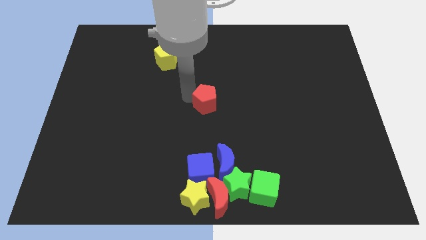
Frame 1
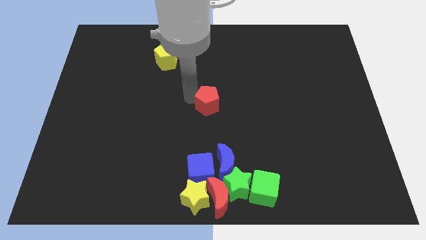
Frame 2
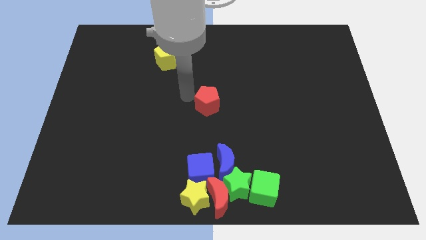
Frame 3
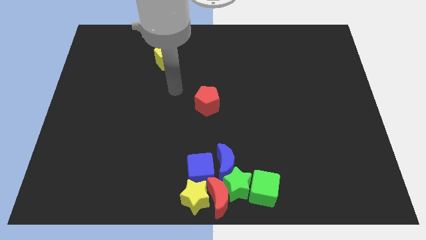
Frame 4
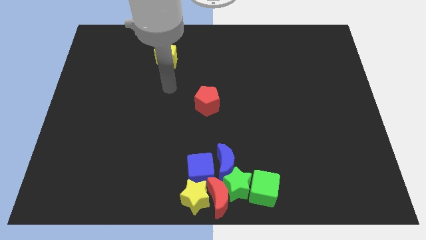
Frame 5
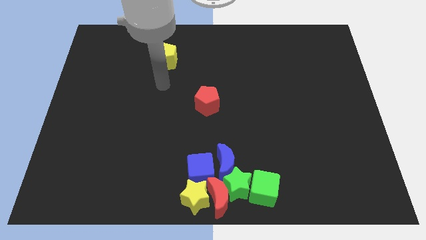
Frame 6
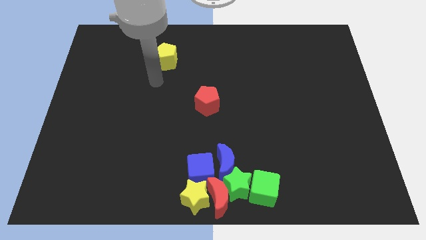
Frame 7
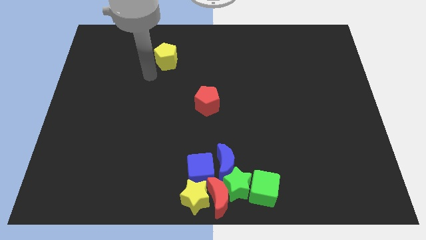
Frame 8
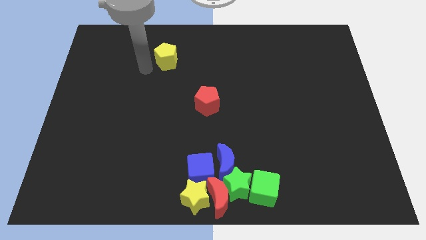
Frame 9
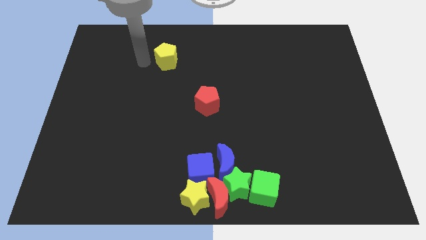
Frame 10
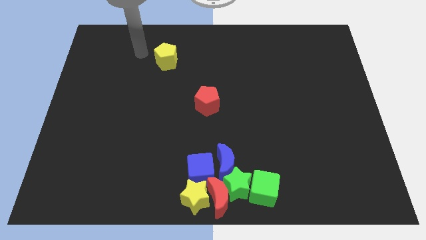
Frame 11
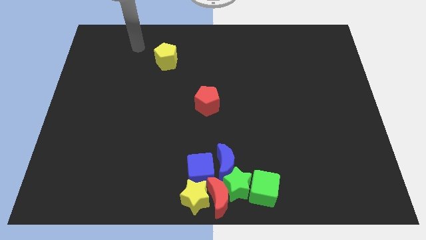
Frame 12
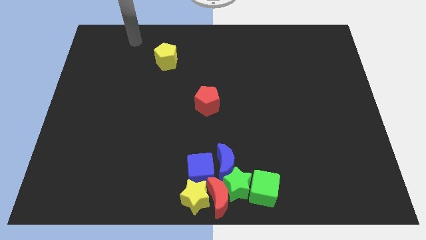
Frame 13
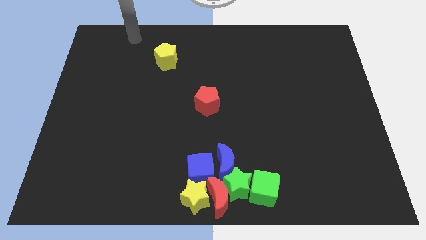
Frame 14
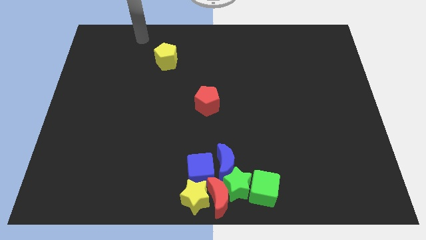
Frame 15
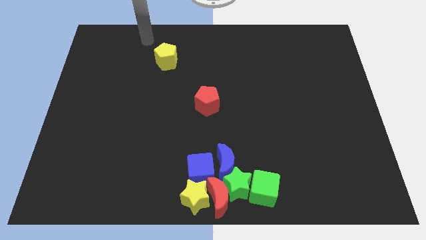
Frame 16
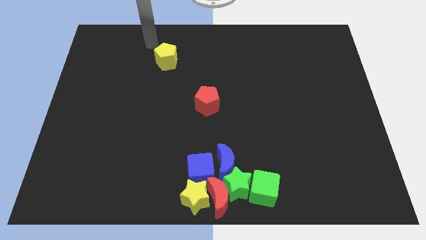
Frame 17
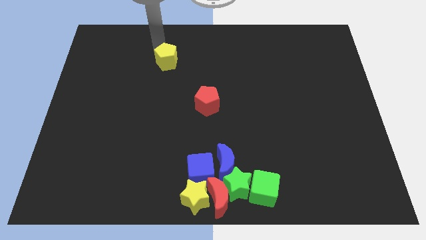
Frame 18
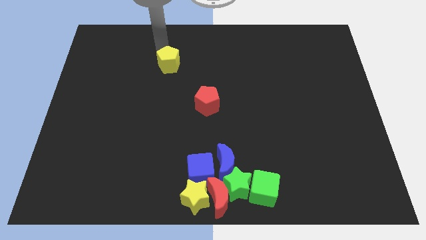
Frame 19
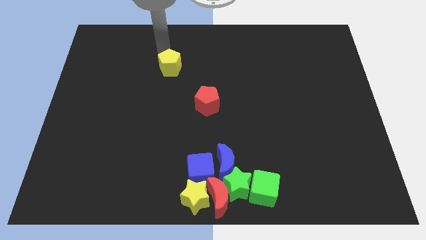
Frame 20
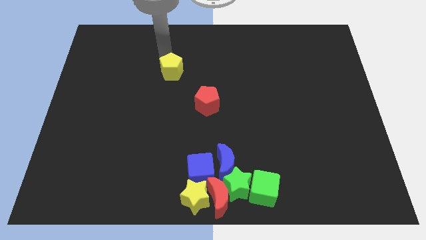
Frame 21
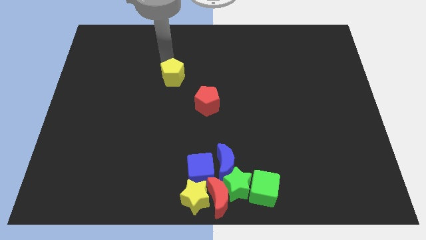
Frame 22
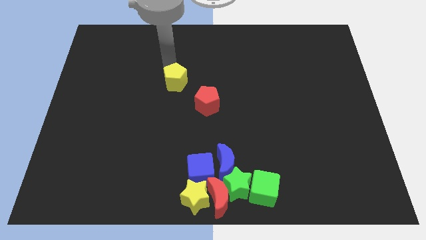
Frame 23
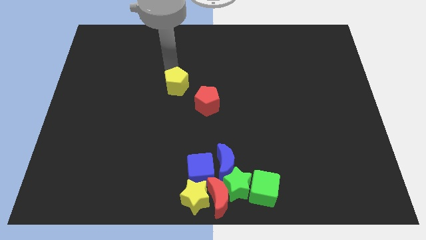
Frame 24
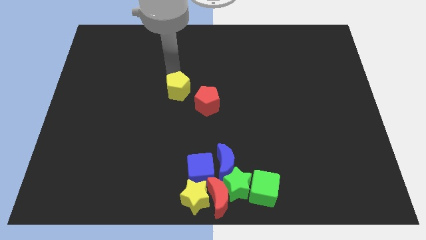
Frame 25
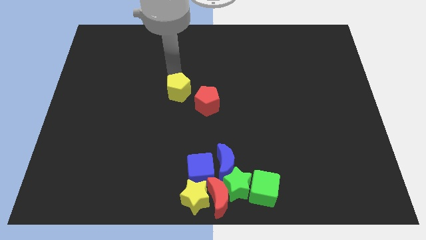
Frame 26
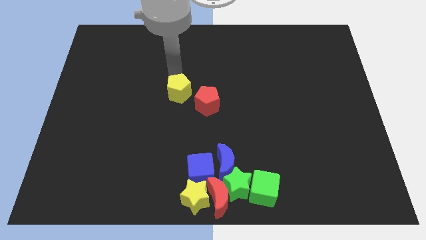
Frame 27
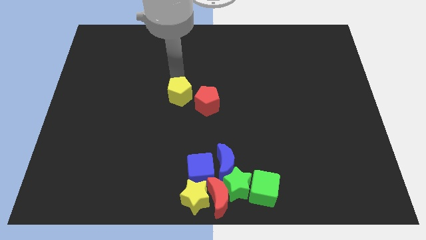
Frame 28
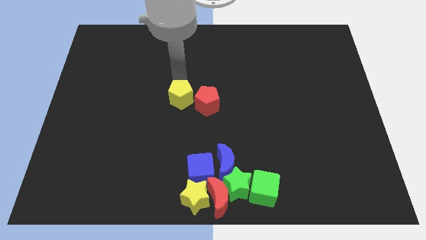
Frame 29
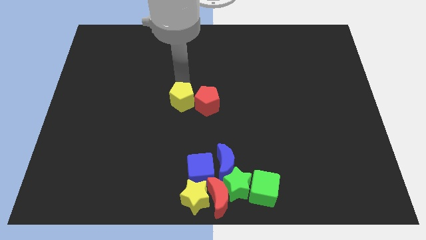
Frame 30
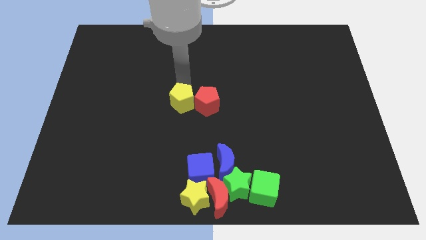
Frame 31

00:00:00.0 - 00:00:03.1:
place the yellow pentagon left to the red pentagon

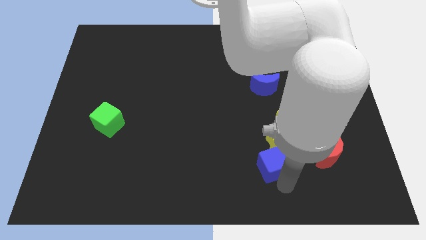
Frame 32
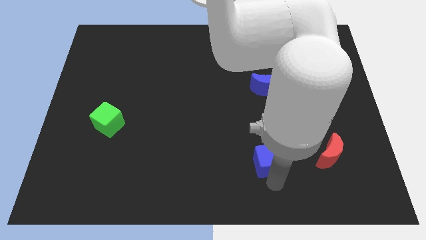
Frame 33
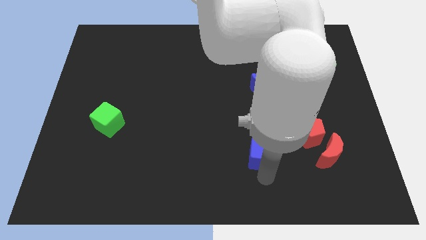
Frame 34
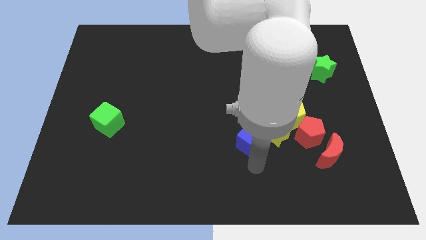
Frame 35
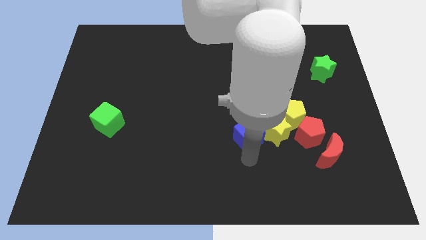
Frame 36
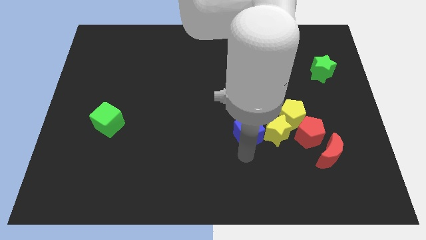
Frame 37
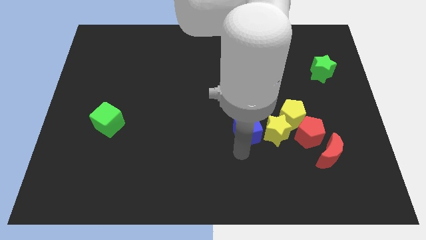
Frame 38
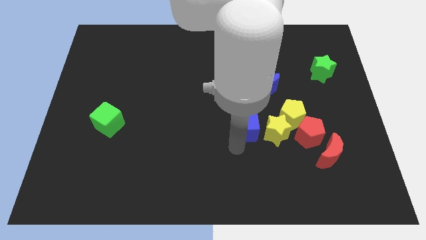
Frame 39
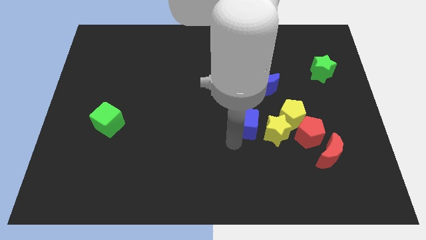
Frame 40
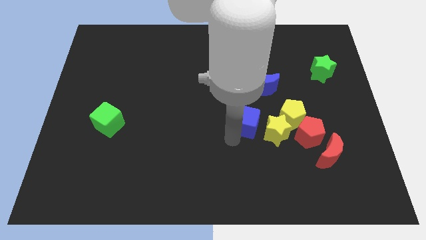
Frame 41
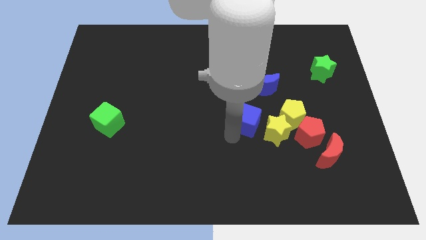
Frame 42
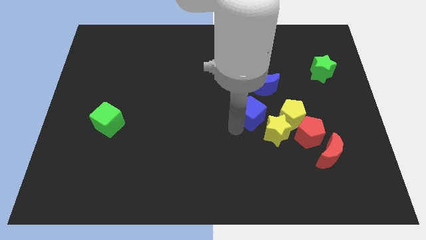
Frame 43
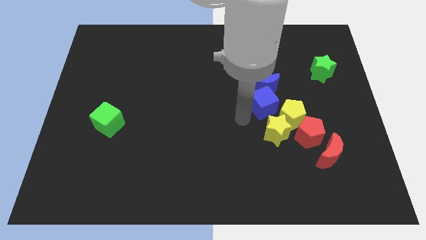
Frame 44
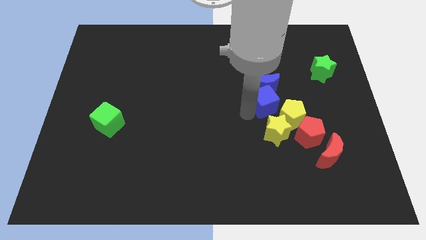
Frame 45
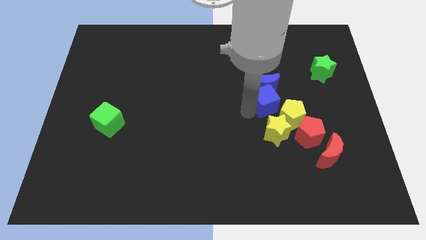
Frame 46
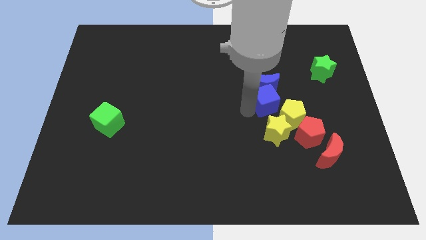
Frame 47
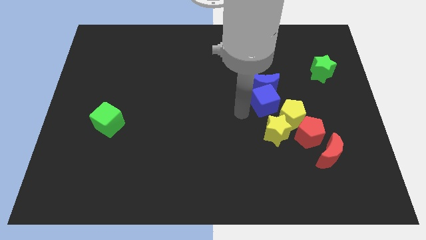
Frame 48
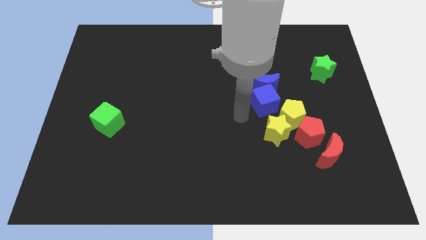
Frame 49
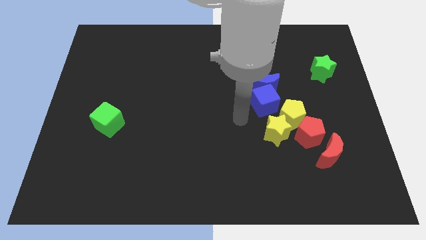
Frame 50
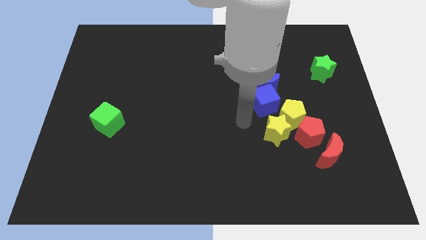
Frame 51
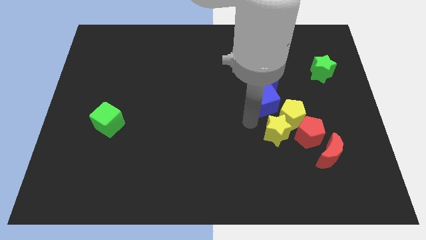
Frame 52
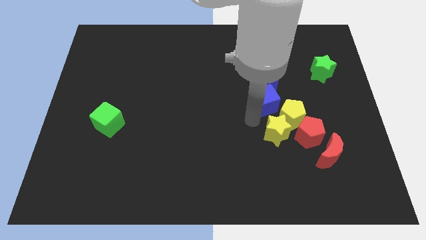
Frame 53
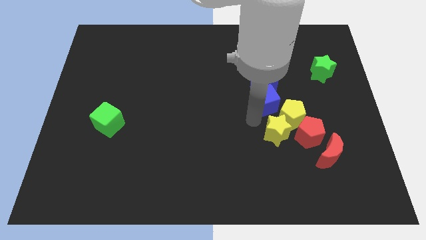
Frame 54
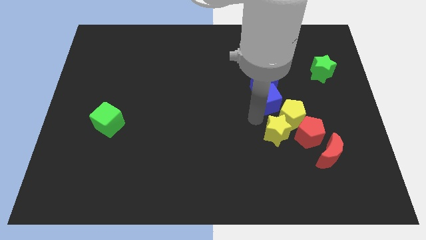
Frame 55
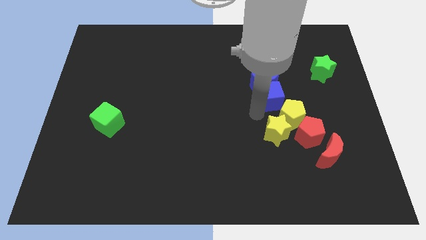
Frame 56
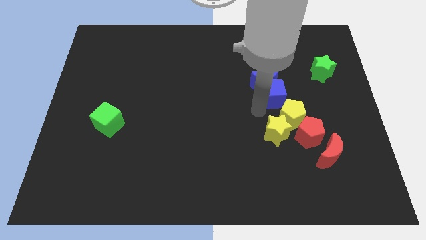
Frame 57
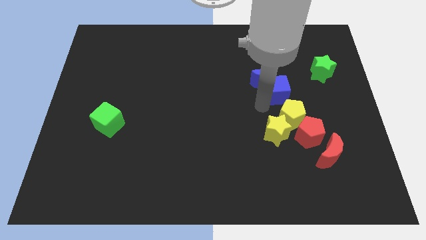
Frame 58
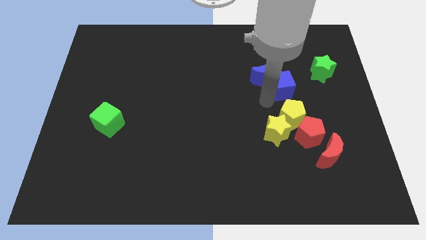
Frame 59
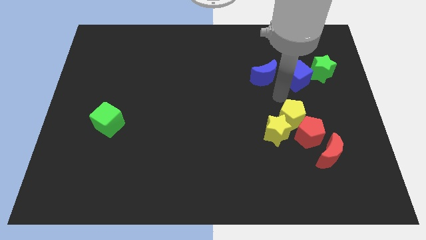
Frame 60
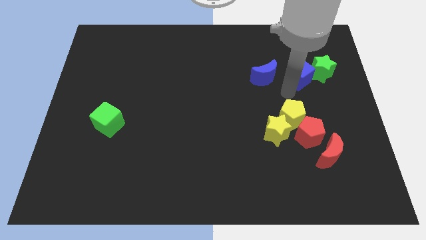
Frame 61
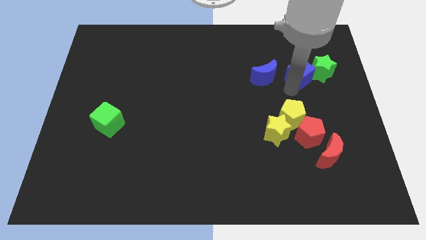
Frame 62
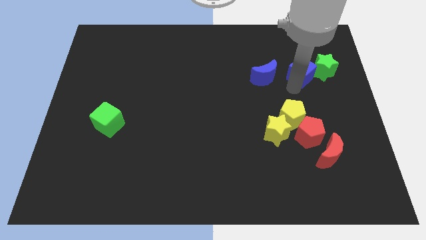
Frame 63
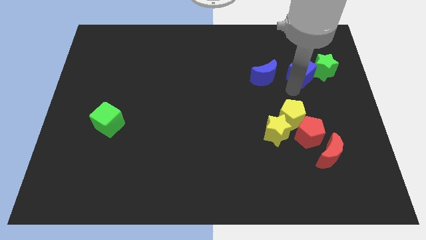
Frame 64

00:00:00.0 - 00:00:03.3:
move blue cube into the green star

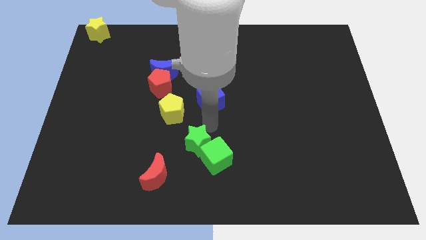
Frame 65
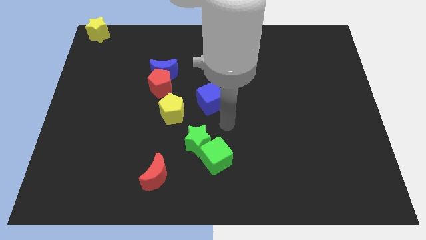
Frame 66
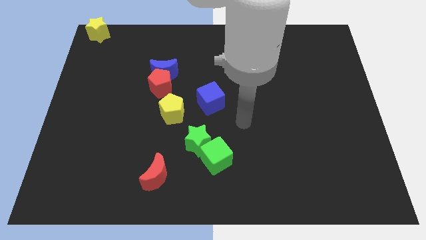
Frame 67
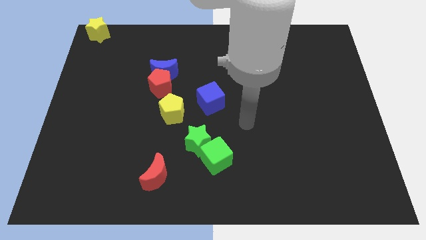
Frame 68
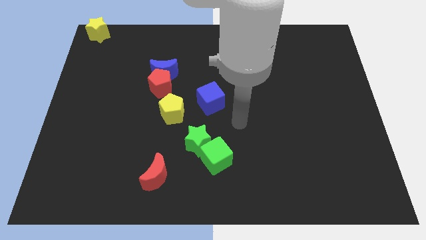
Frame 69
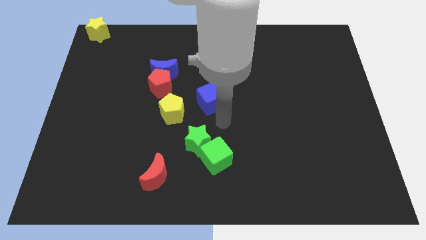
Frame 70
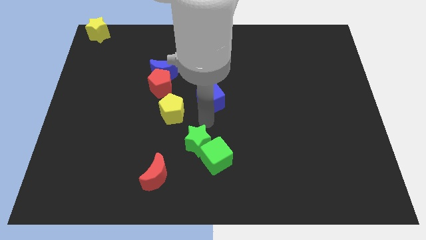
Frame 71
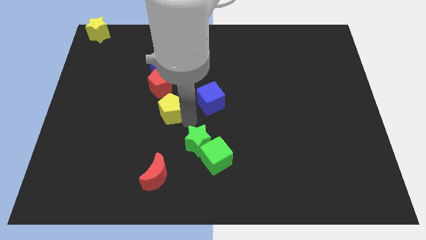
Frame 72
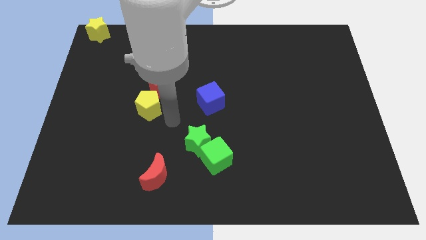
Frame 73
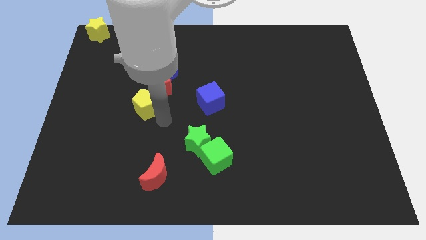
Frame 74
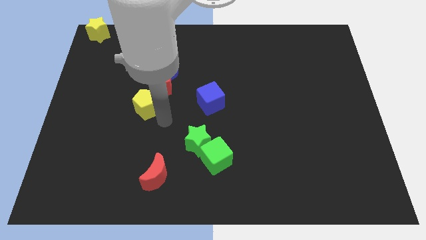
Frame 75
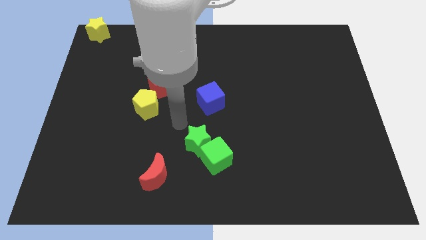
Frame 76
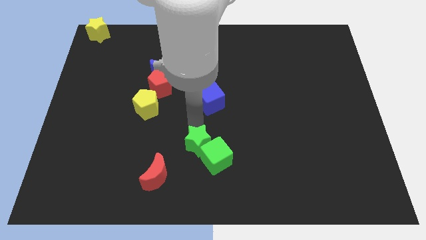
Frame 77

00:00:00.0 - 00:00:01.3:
put the yellow pentagon at the bottom left of the red pentagon

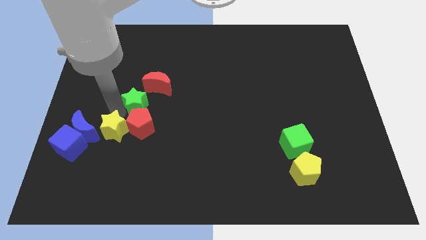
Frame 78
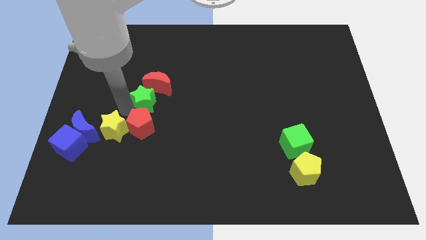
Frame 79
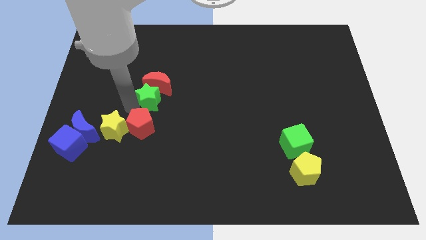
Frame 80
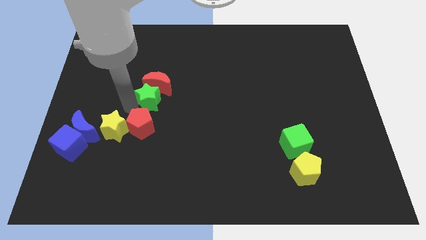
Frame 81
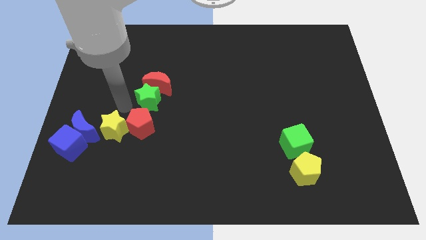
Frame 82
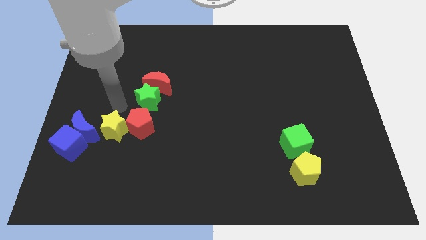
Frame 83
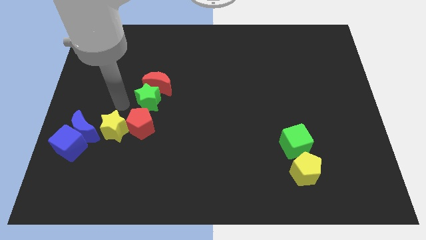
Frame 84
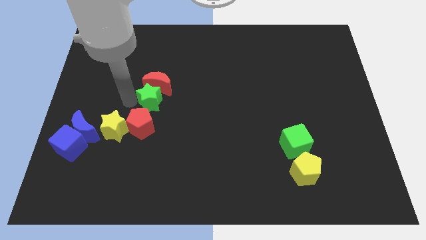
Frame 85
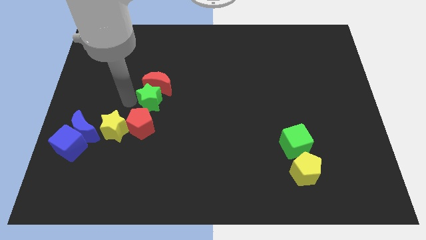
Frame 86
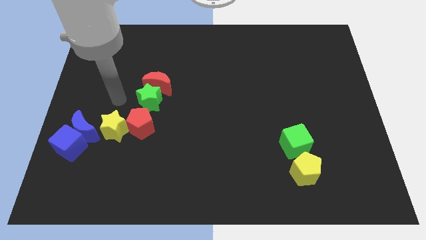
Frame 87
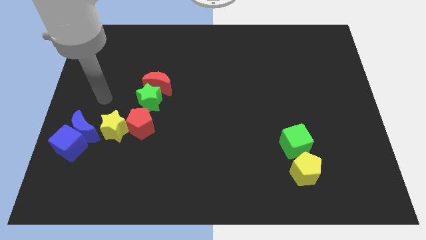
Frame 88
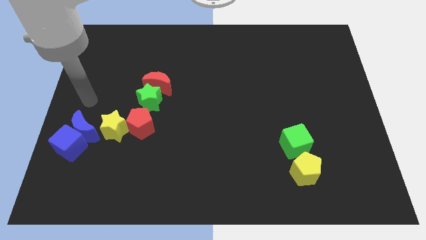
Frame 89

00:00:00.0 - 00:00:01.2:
place the green star below th red moon

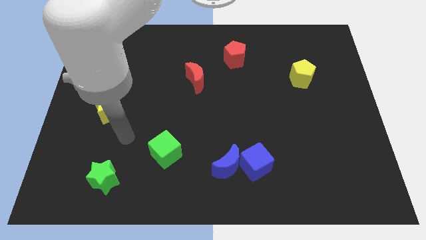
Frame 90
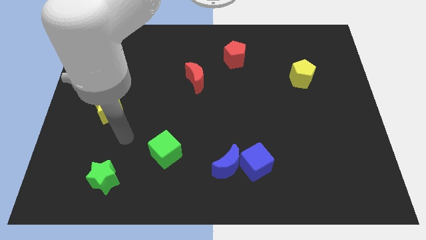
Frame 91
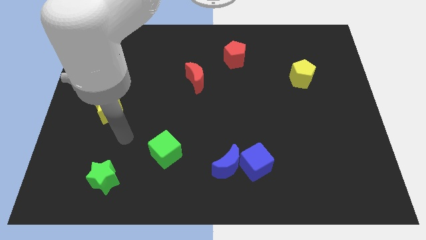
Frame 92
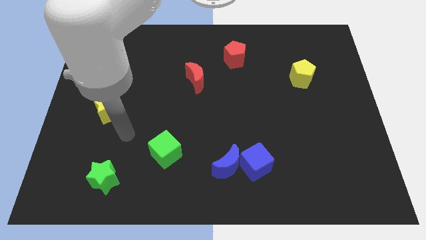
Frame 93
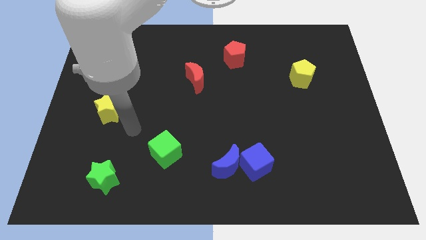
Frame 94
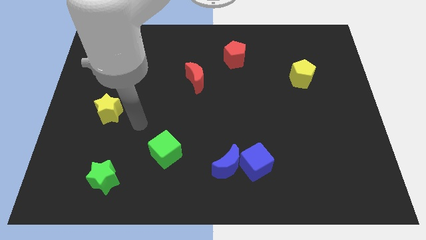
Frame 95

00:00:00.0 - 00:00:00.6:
place arm right yellow star
